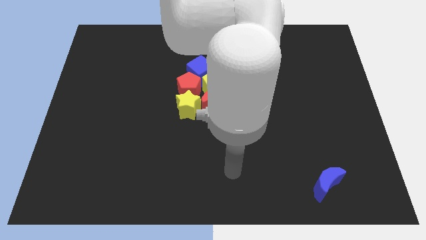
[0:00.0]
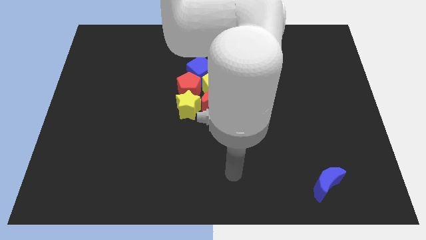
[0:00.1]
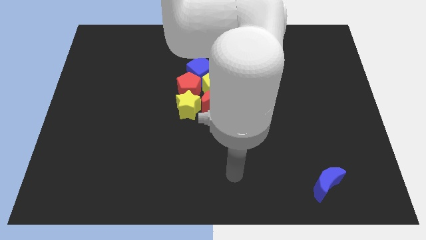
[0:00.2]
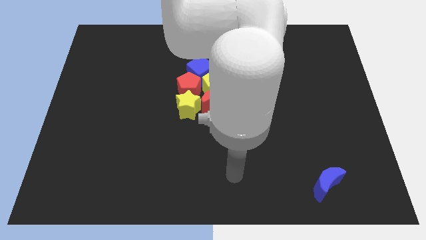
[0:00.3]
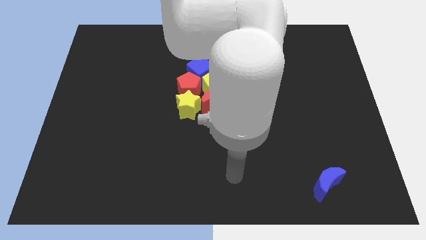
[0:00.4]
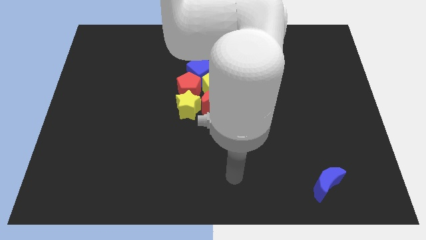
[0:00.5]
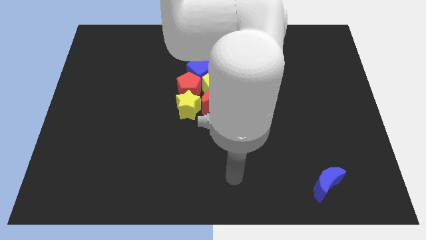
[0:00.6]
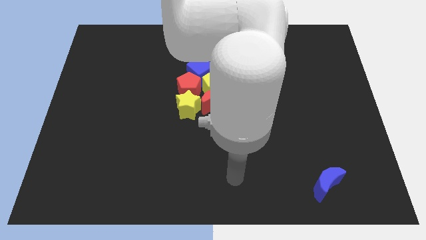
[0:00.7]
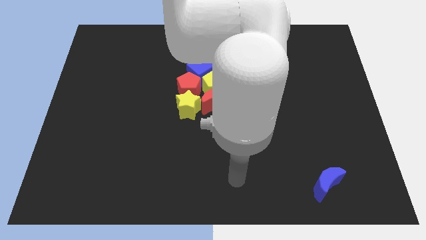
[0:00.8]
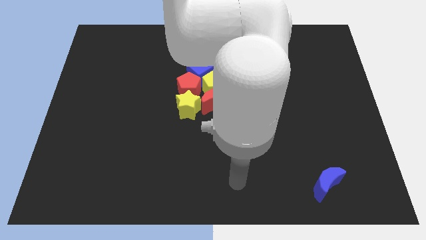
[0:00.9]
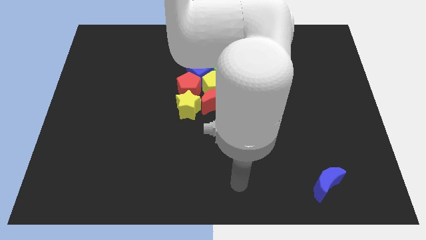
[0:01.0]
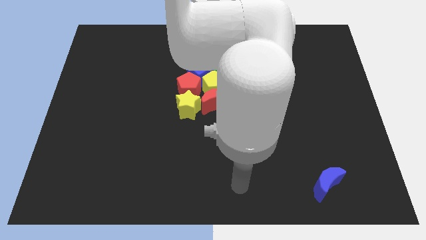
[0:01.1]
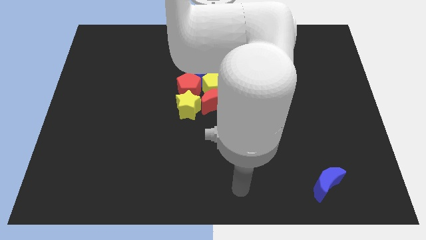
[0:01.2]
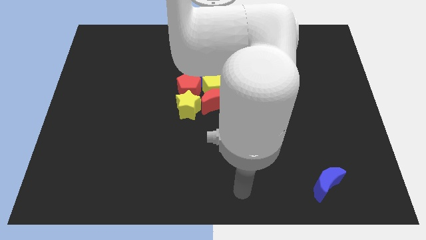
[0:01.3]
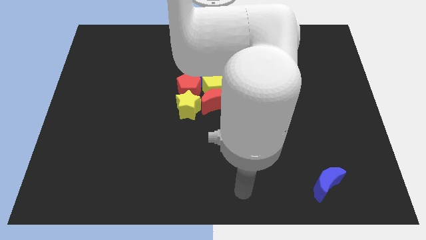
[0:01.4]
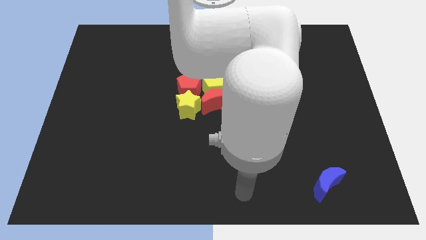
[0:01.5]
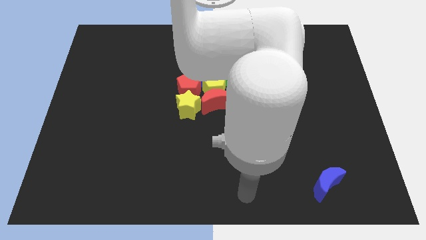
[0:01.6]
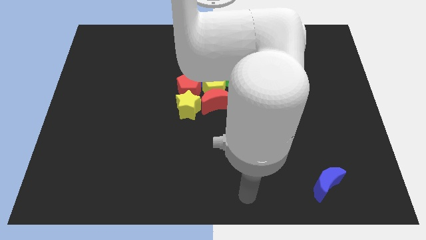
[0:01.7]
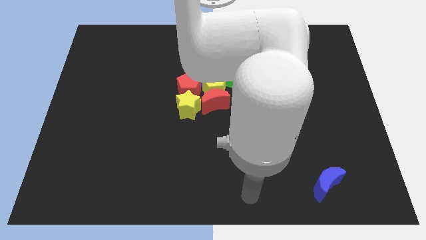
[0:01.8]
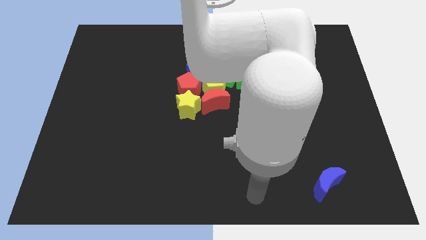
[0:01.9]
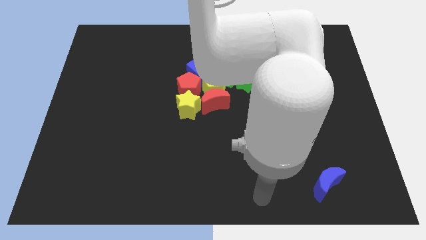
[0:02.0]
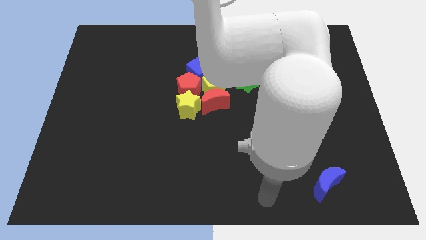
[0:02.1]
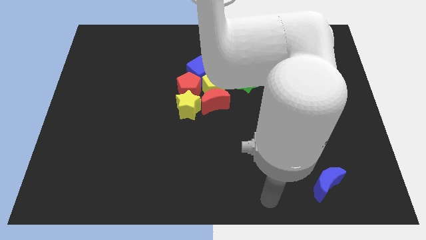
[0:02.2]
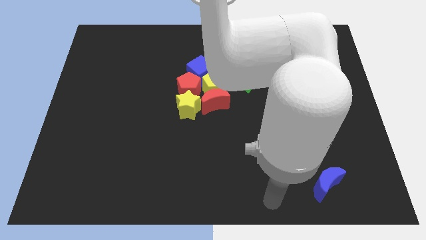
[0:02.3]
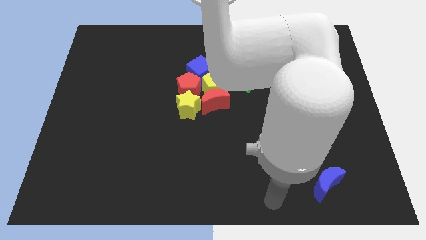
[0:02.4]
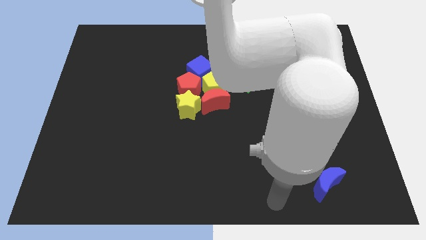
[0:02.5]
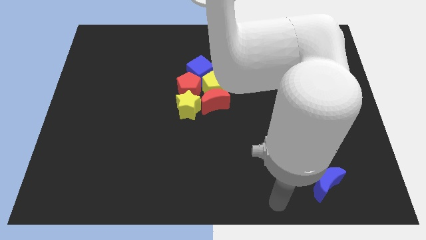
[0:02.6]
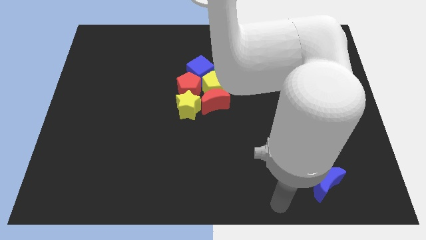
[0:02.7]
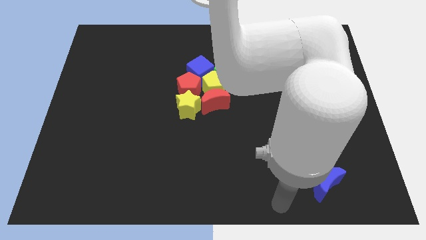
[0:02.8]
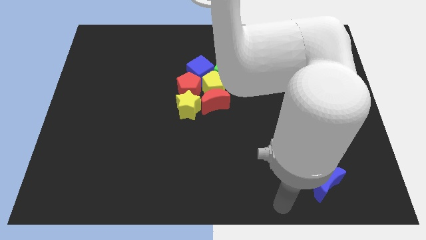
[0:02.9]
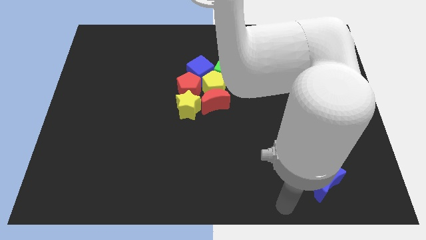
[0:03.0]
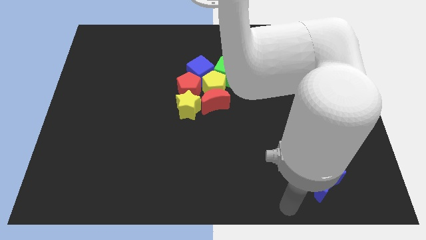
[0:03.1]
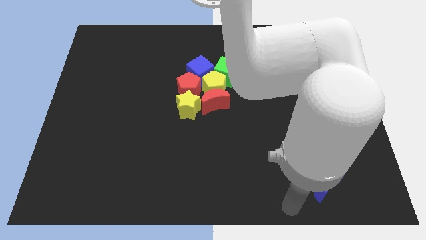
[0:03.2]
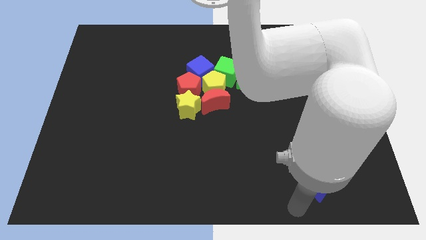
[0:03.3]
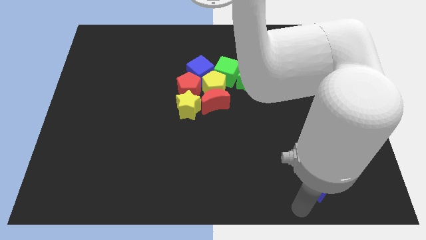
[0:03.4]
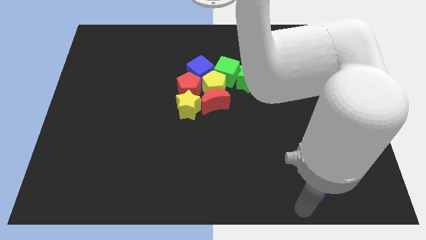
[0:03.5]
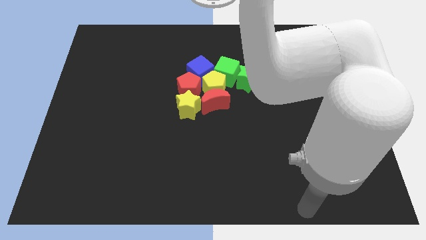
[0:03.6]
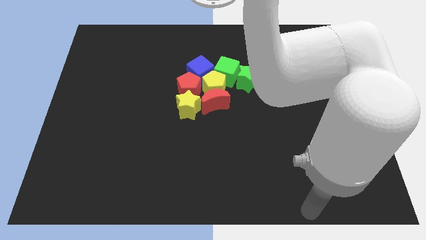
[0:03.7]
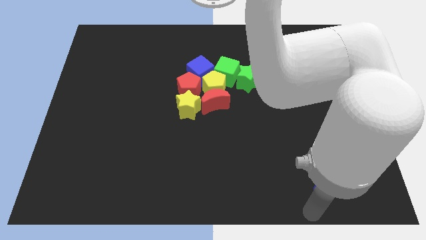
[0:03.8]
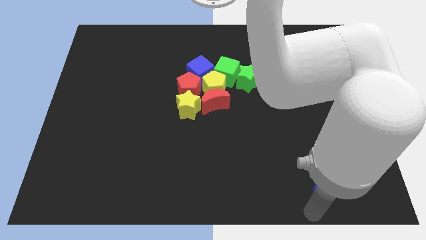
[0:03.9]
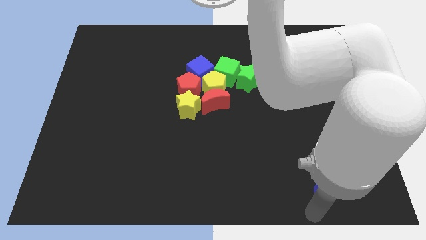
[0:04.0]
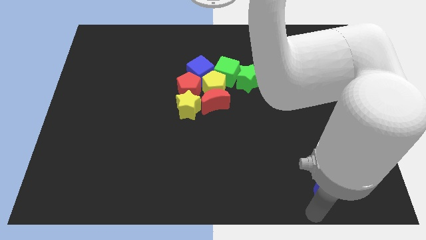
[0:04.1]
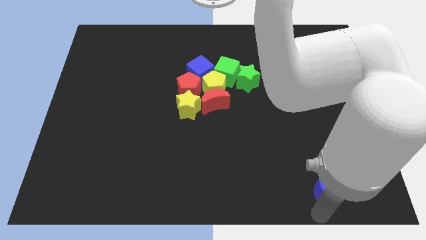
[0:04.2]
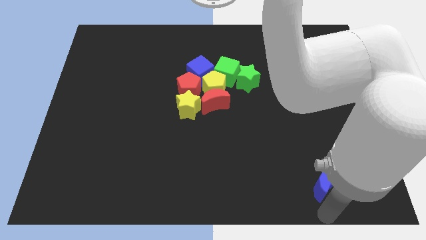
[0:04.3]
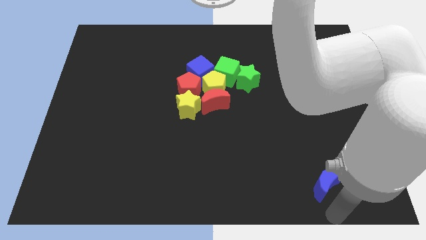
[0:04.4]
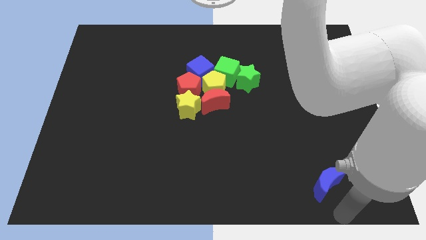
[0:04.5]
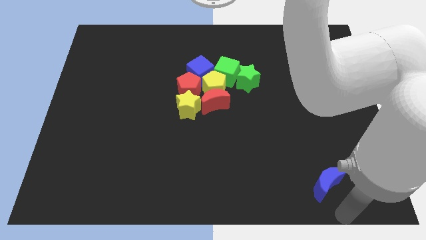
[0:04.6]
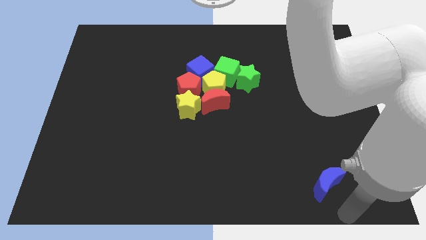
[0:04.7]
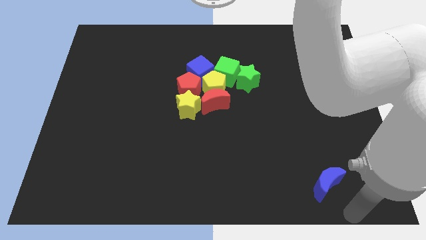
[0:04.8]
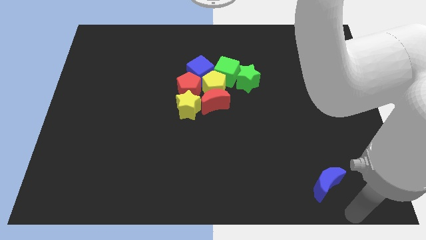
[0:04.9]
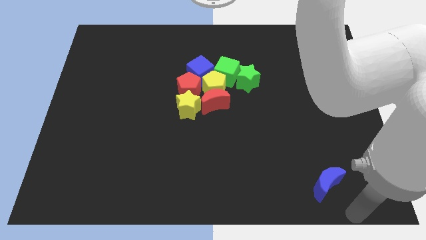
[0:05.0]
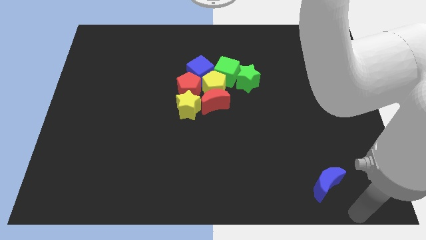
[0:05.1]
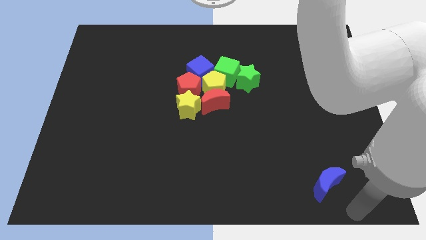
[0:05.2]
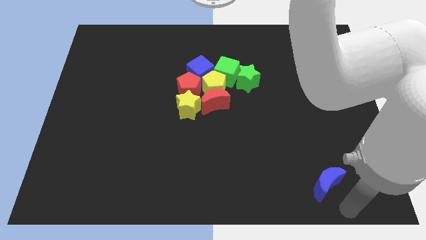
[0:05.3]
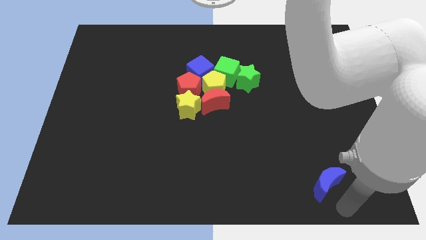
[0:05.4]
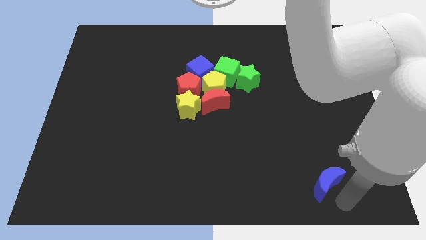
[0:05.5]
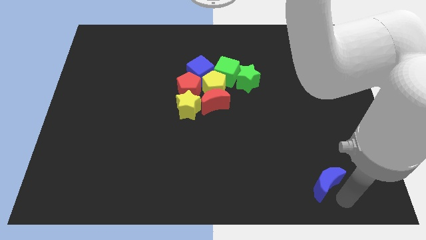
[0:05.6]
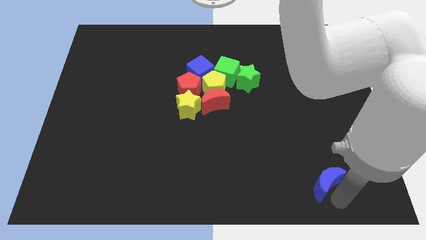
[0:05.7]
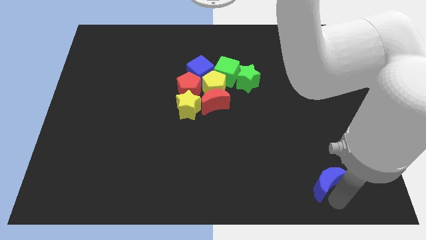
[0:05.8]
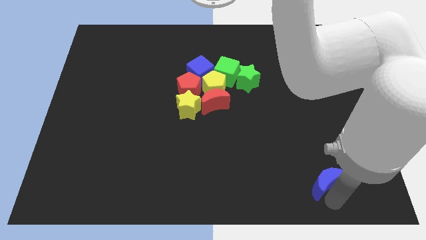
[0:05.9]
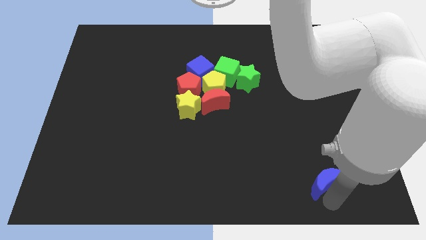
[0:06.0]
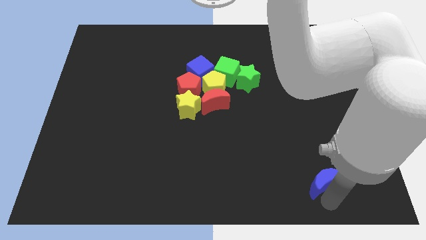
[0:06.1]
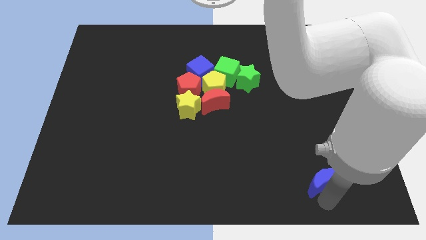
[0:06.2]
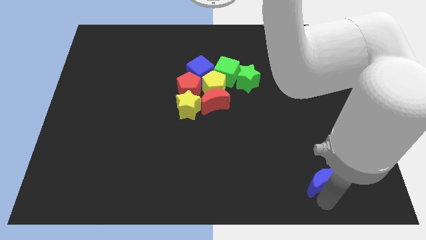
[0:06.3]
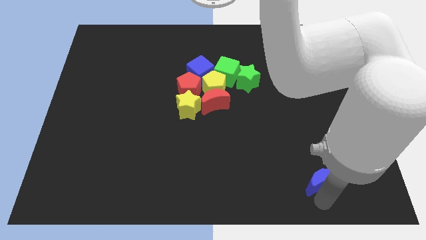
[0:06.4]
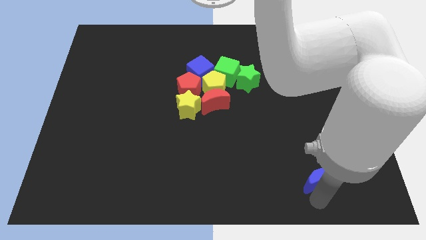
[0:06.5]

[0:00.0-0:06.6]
slightly move the blue crescent to the top of the board

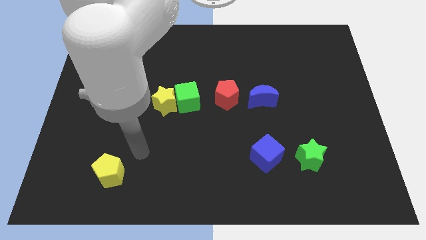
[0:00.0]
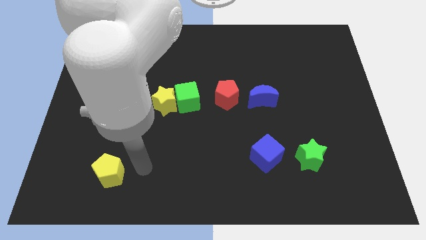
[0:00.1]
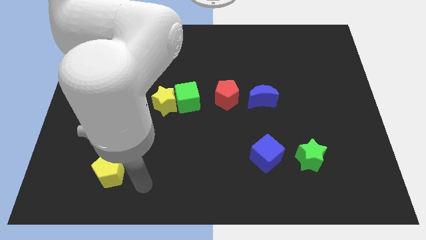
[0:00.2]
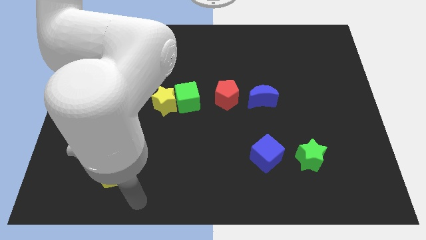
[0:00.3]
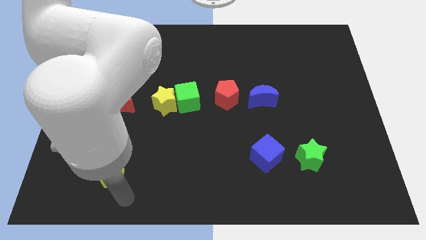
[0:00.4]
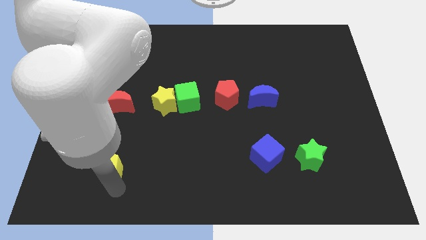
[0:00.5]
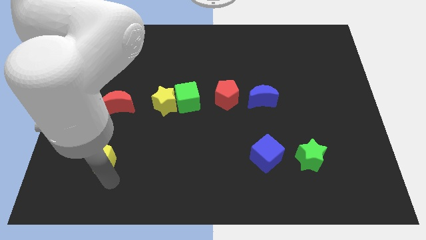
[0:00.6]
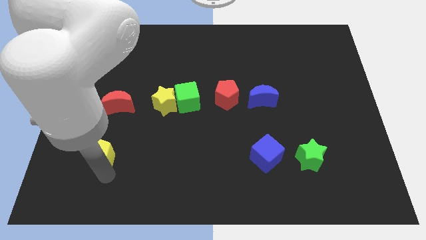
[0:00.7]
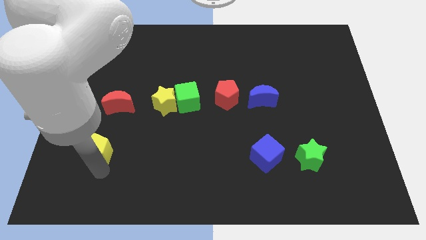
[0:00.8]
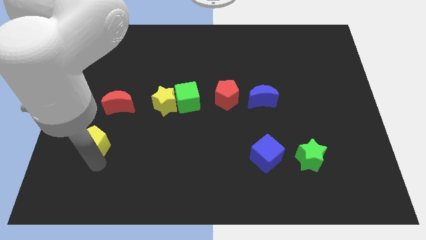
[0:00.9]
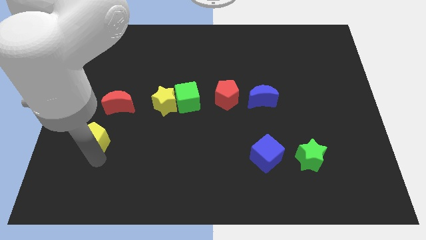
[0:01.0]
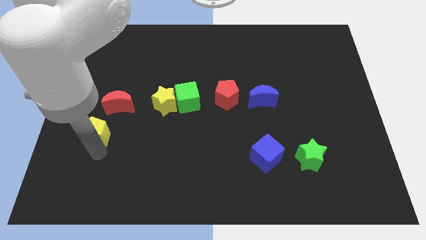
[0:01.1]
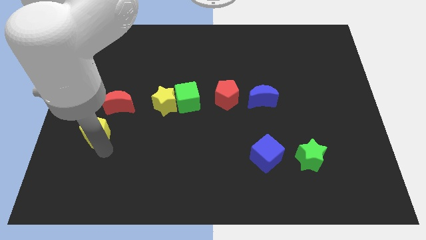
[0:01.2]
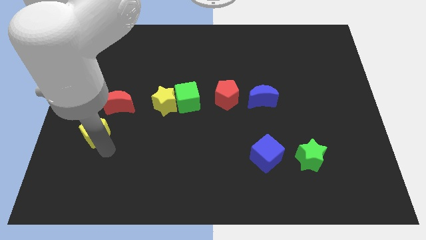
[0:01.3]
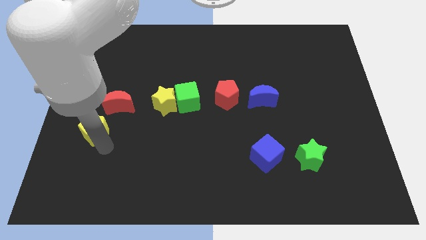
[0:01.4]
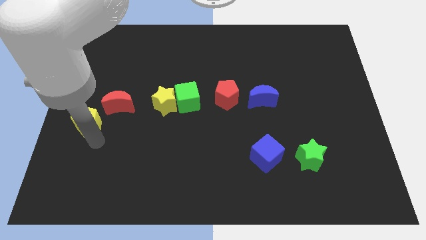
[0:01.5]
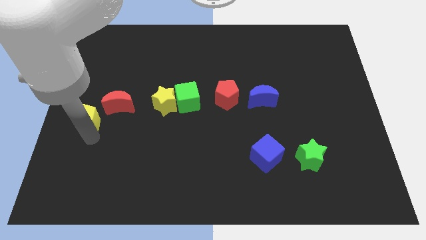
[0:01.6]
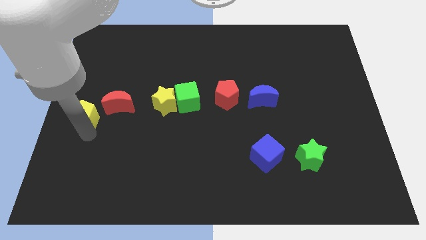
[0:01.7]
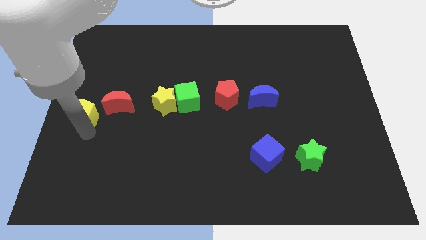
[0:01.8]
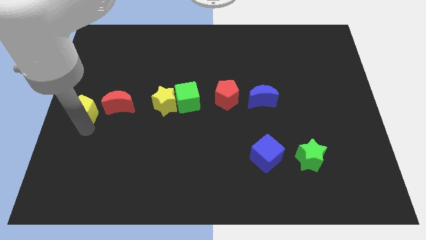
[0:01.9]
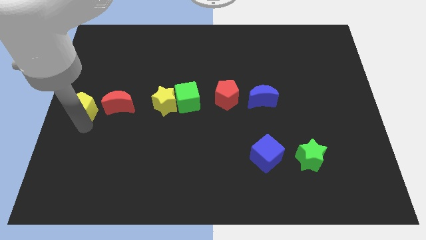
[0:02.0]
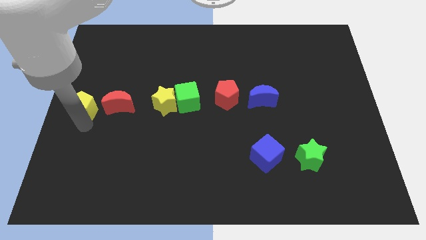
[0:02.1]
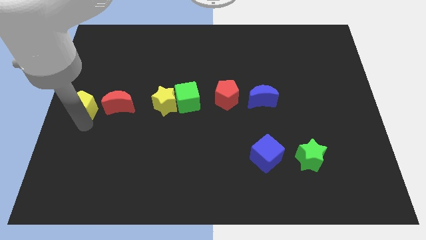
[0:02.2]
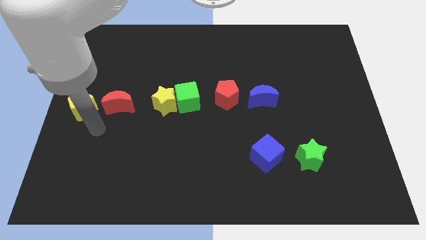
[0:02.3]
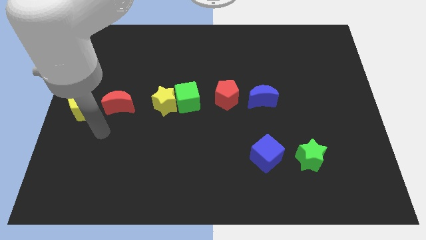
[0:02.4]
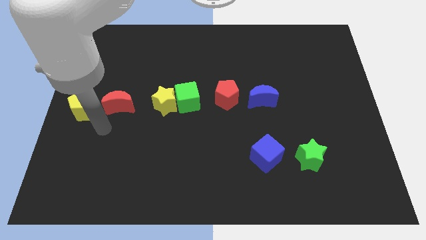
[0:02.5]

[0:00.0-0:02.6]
push the yellow pentagon to the left of red crescent
